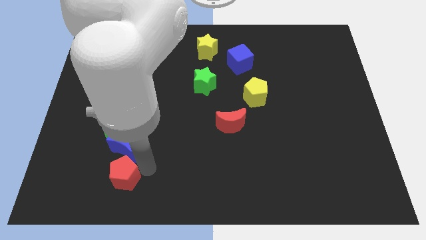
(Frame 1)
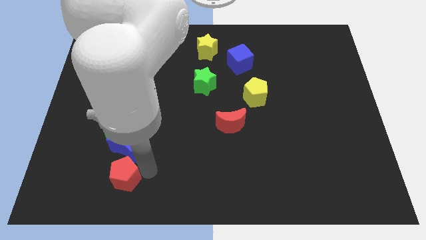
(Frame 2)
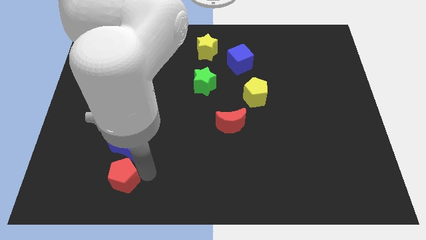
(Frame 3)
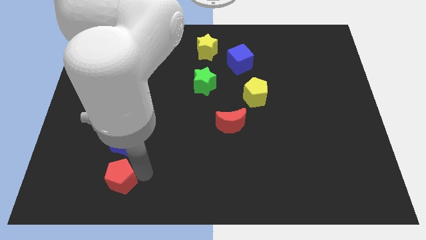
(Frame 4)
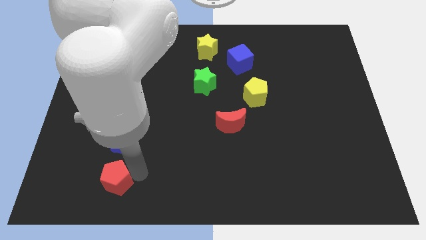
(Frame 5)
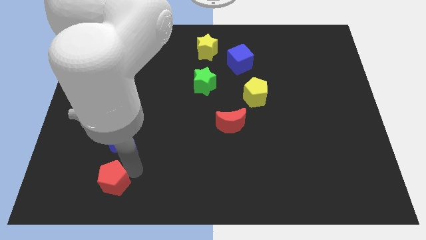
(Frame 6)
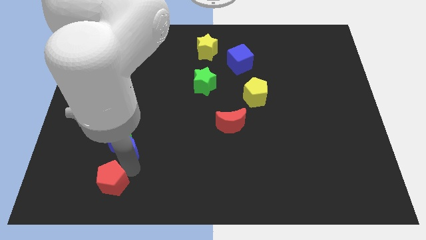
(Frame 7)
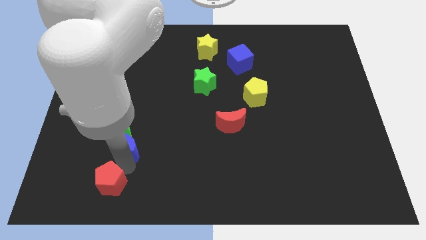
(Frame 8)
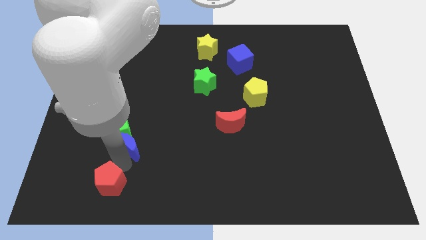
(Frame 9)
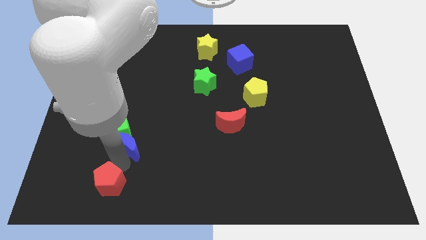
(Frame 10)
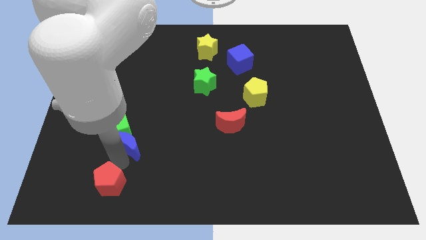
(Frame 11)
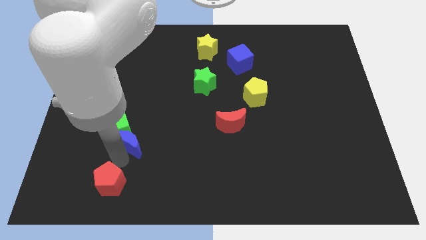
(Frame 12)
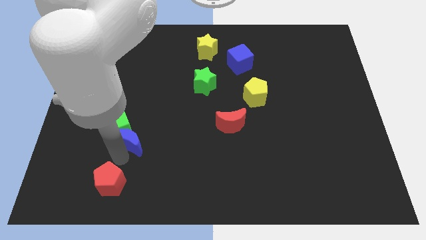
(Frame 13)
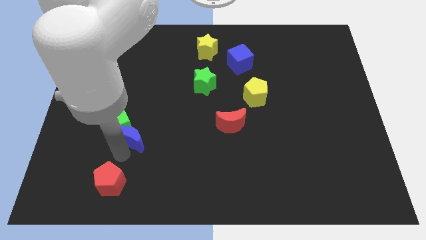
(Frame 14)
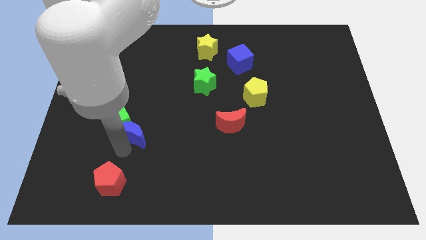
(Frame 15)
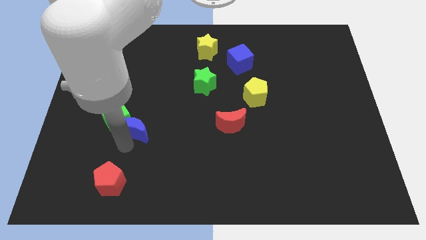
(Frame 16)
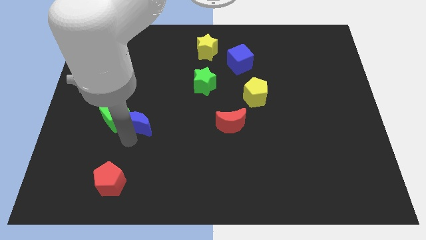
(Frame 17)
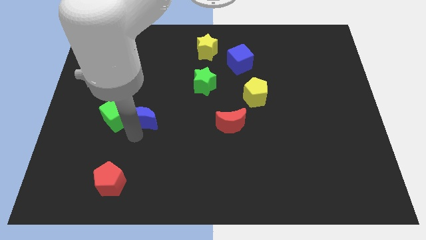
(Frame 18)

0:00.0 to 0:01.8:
separate the blue moon from the red pentagon

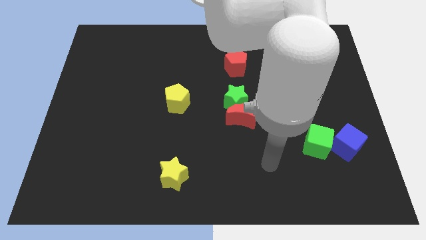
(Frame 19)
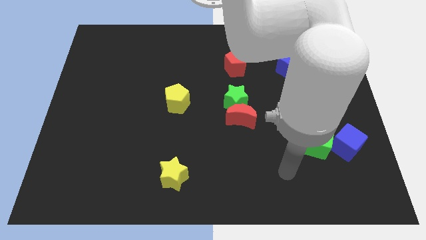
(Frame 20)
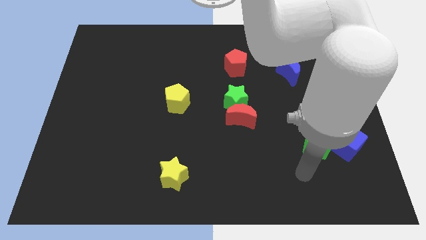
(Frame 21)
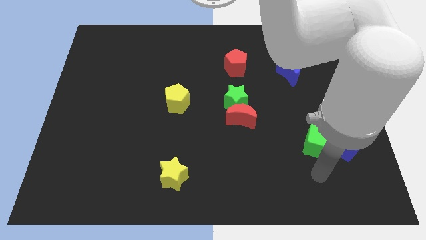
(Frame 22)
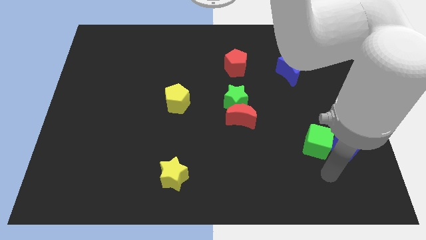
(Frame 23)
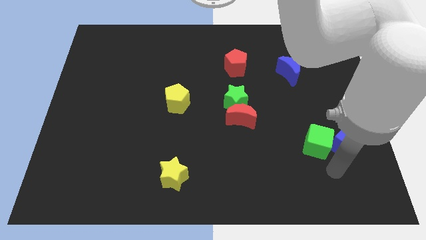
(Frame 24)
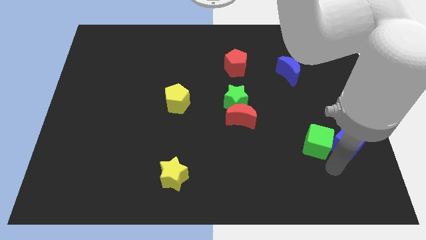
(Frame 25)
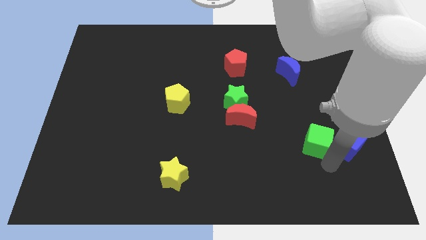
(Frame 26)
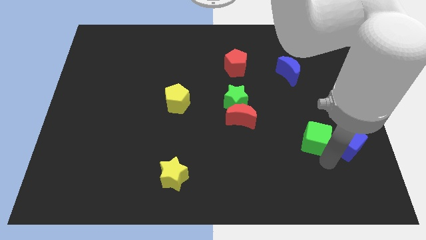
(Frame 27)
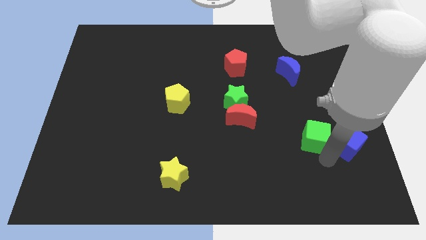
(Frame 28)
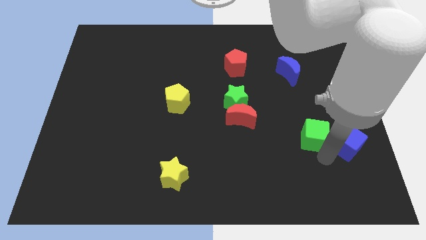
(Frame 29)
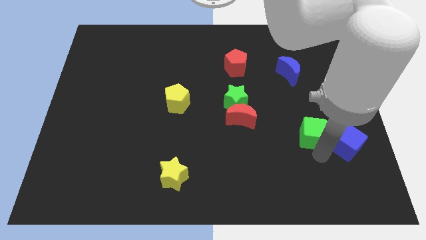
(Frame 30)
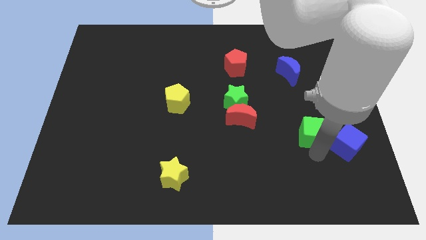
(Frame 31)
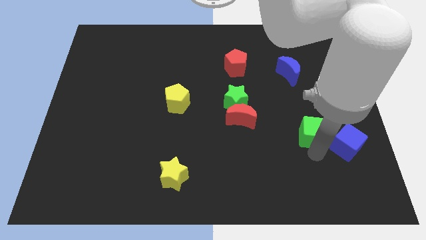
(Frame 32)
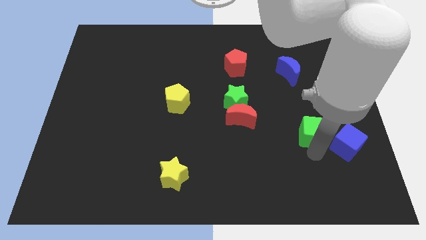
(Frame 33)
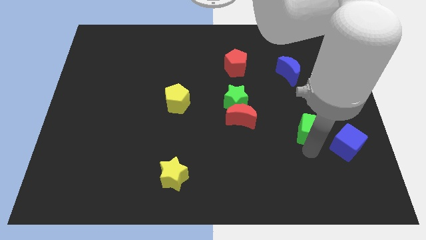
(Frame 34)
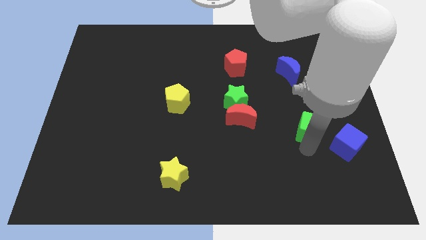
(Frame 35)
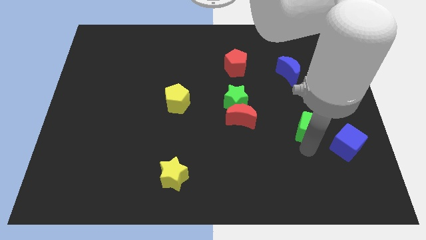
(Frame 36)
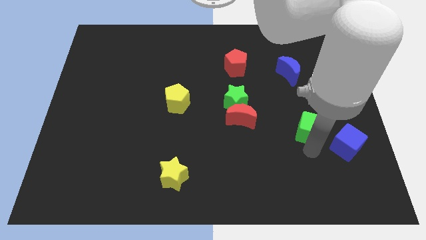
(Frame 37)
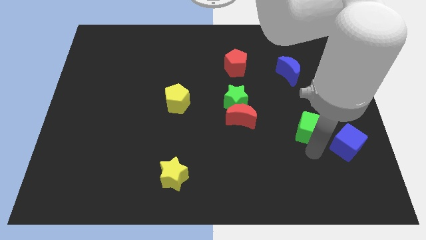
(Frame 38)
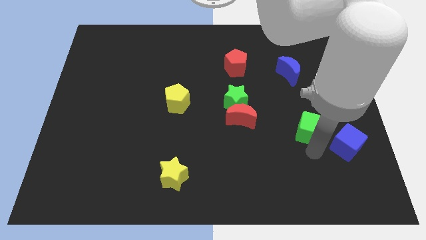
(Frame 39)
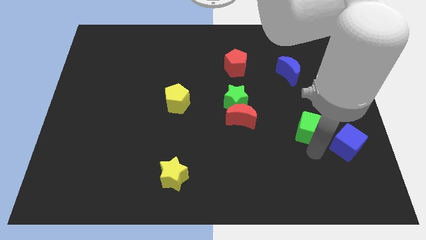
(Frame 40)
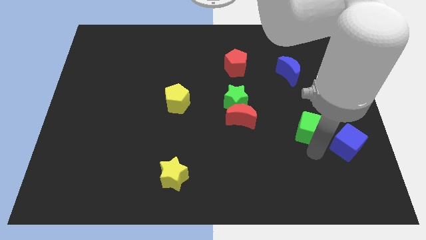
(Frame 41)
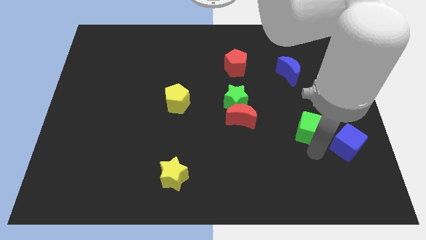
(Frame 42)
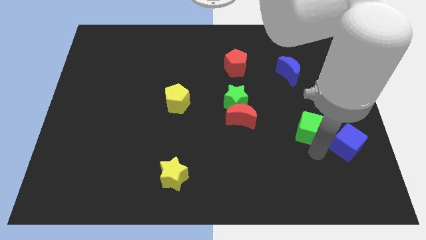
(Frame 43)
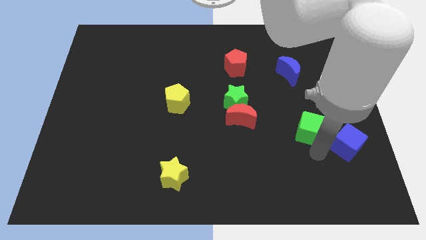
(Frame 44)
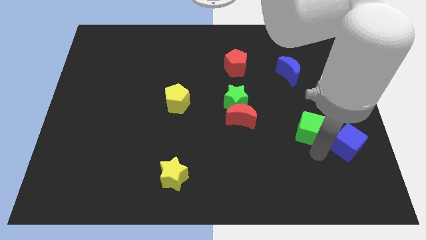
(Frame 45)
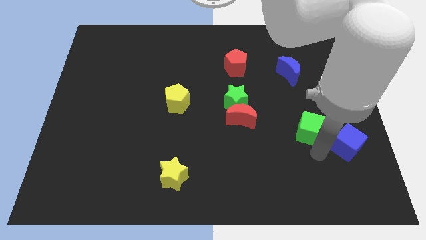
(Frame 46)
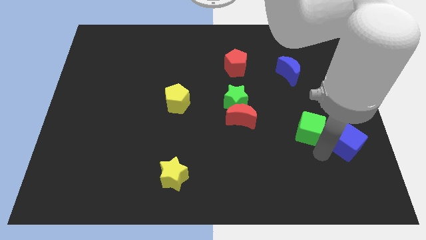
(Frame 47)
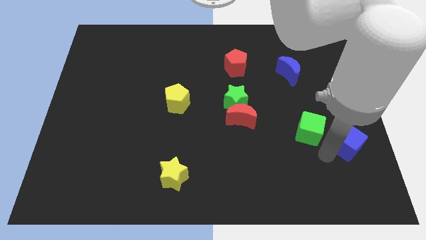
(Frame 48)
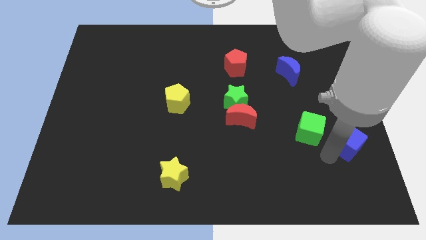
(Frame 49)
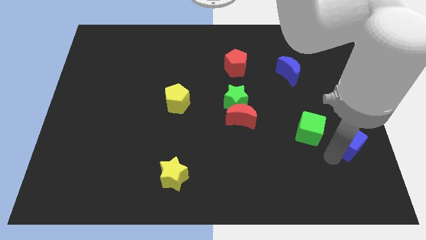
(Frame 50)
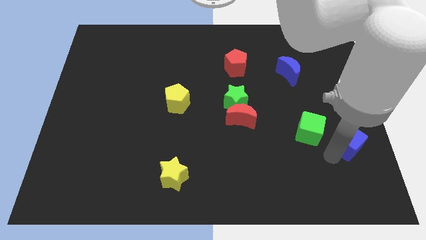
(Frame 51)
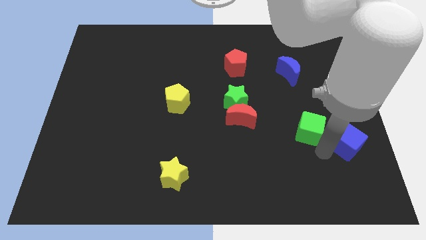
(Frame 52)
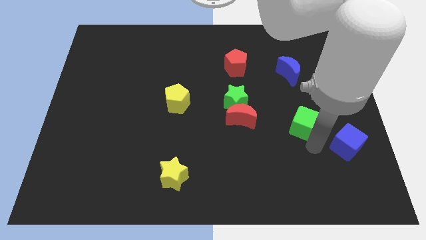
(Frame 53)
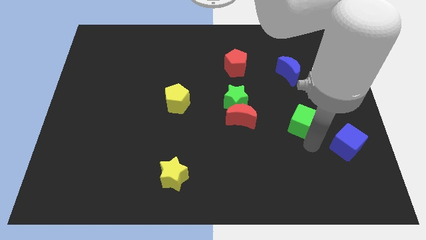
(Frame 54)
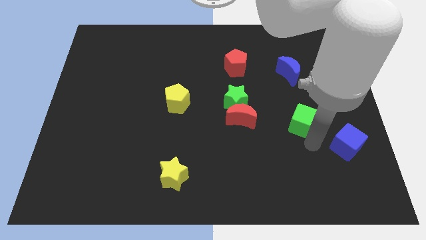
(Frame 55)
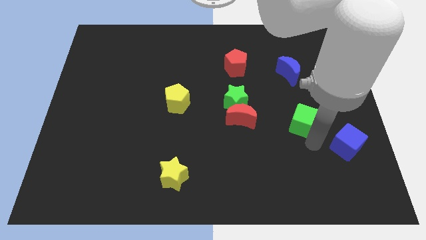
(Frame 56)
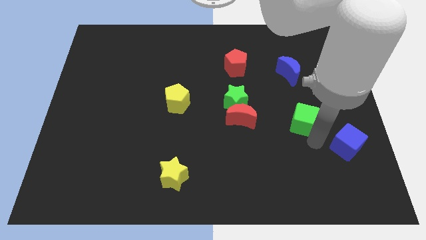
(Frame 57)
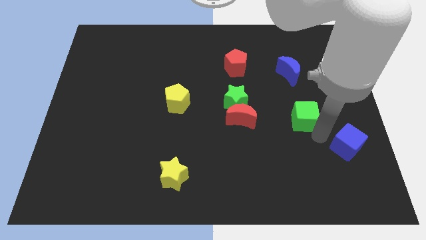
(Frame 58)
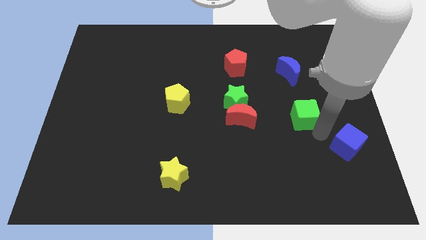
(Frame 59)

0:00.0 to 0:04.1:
move the green cube to the right of the red crescent

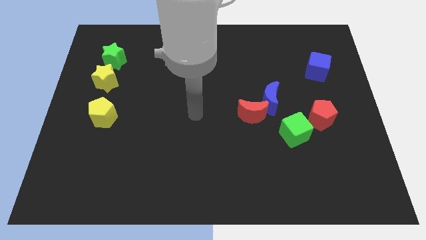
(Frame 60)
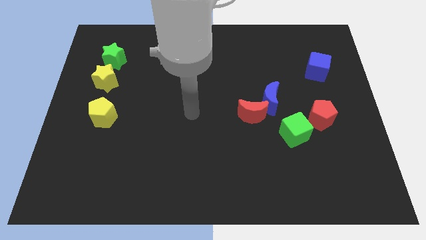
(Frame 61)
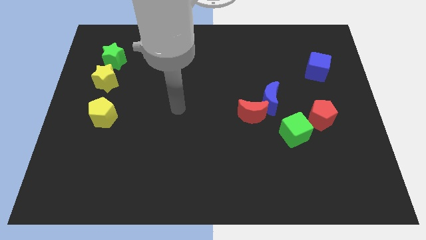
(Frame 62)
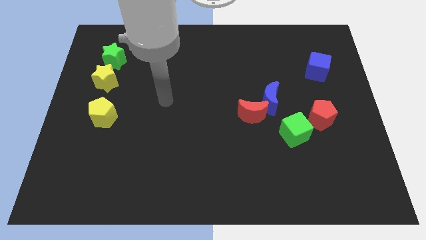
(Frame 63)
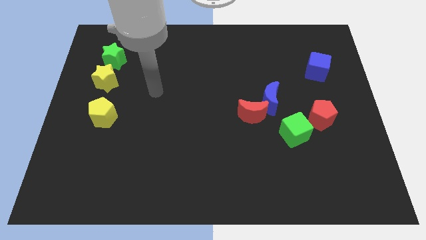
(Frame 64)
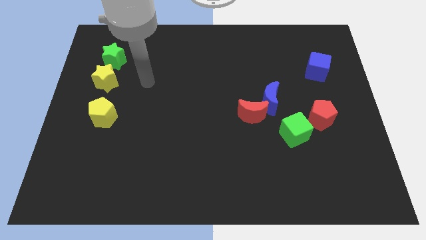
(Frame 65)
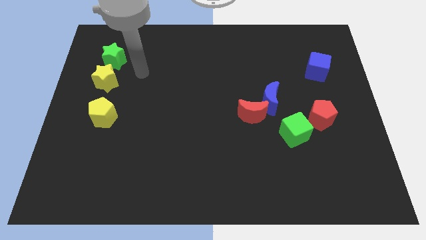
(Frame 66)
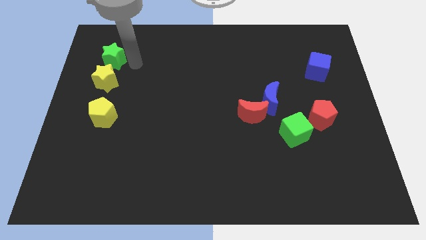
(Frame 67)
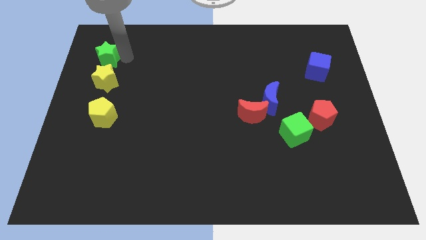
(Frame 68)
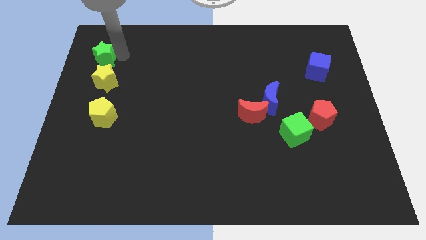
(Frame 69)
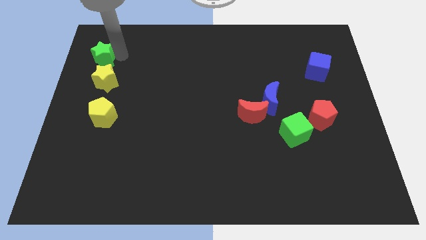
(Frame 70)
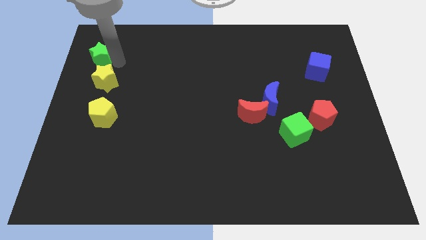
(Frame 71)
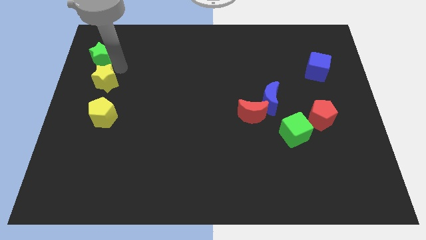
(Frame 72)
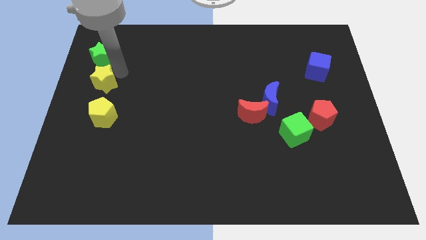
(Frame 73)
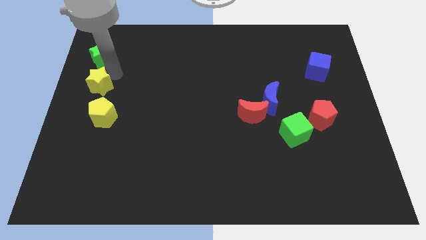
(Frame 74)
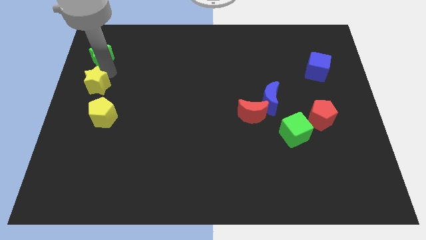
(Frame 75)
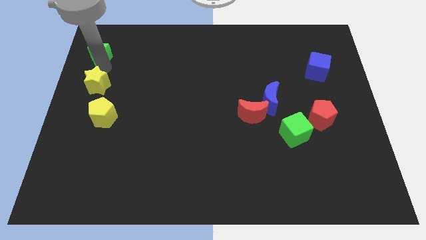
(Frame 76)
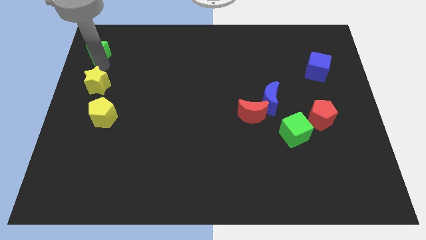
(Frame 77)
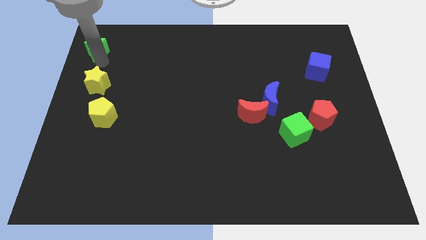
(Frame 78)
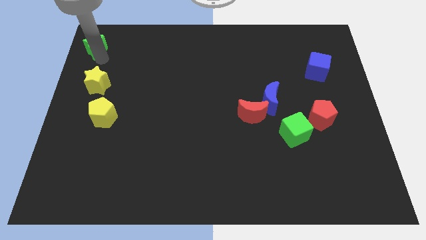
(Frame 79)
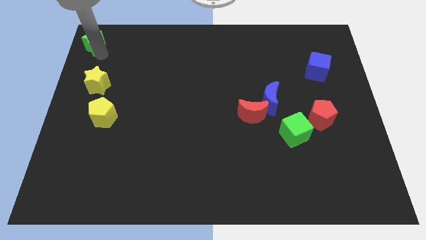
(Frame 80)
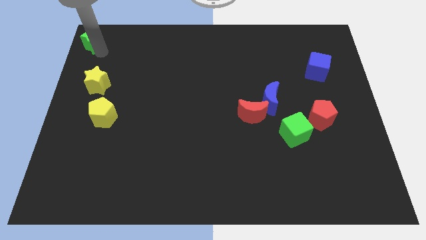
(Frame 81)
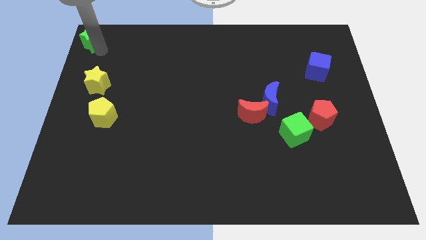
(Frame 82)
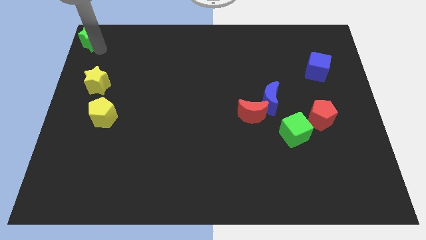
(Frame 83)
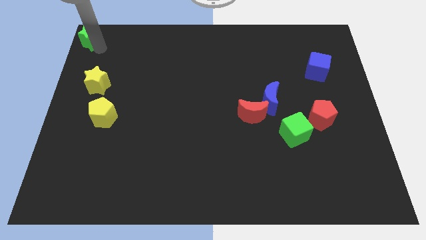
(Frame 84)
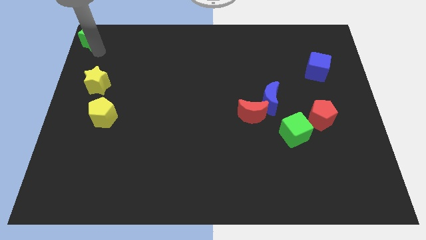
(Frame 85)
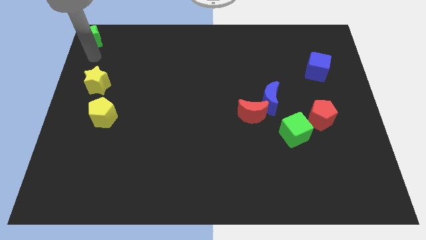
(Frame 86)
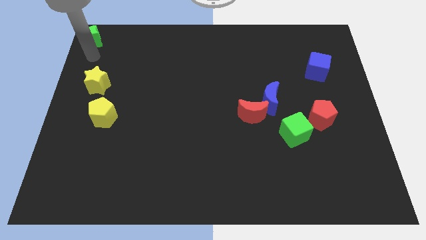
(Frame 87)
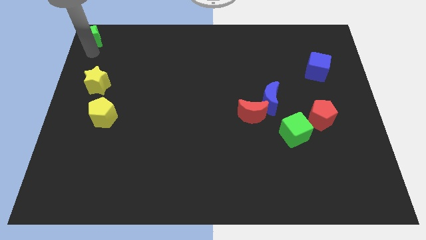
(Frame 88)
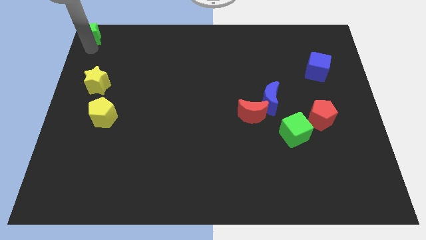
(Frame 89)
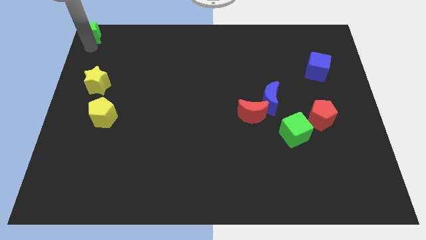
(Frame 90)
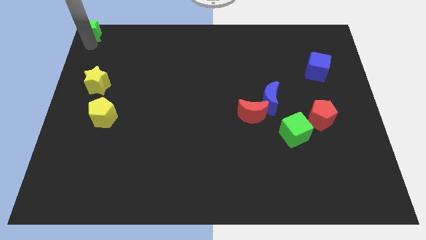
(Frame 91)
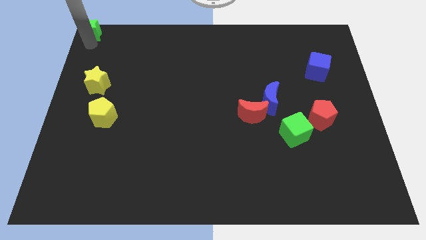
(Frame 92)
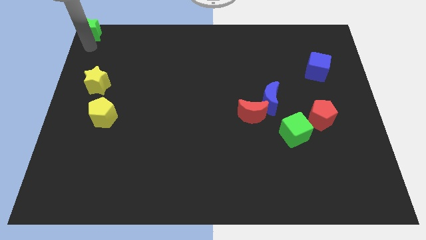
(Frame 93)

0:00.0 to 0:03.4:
move the green star to the top left of the table
